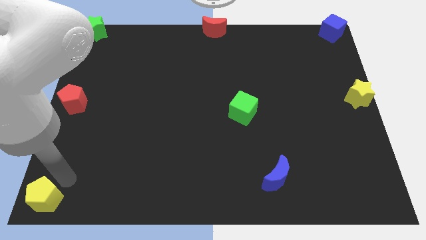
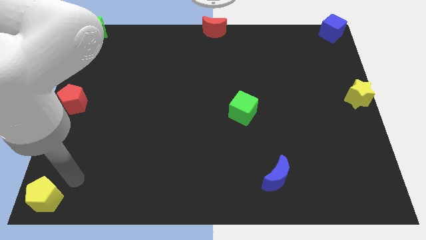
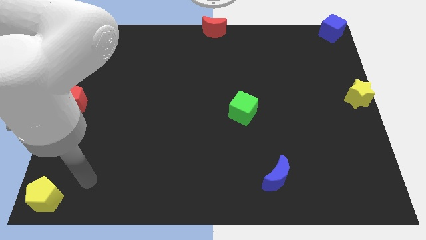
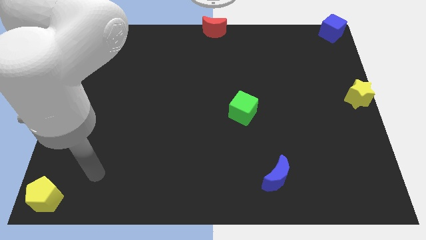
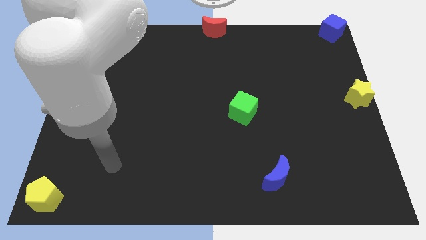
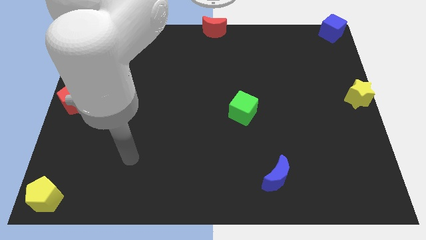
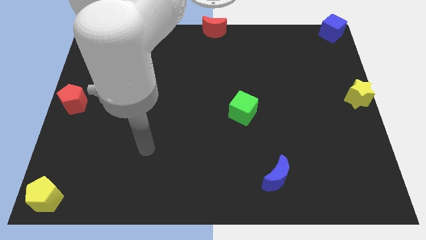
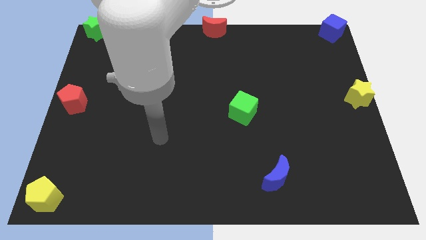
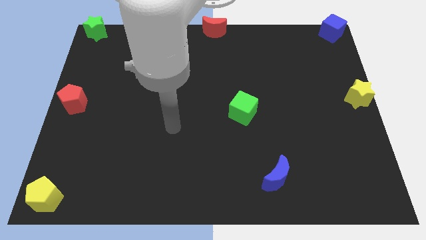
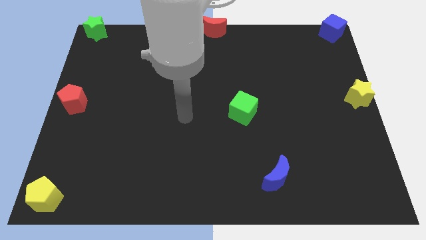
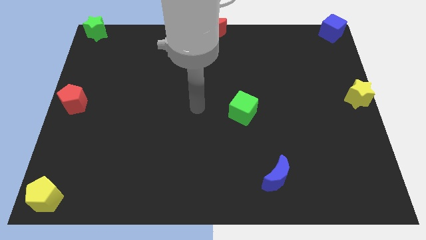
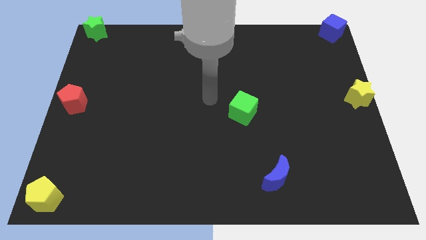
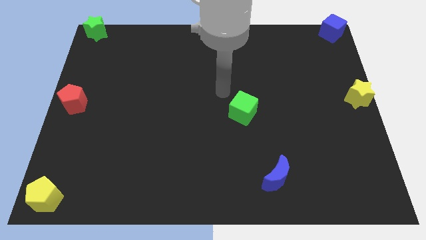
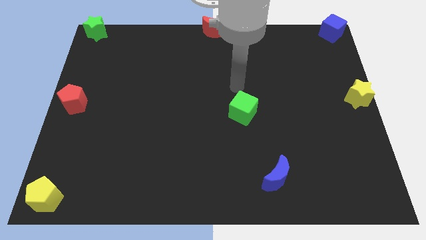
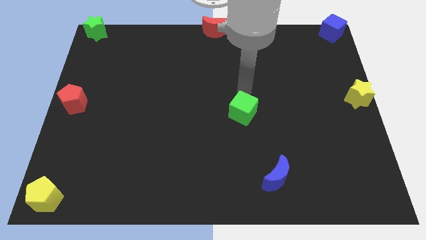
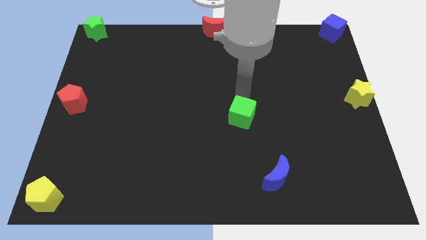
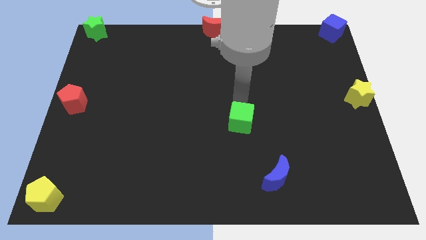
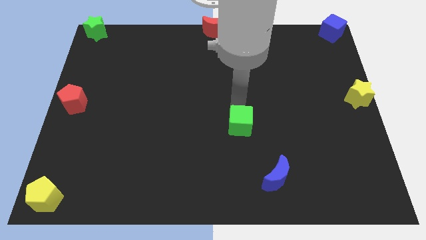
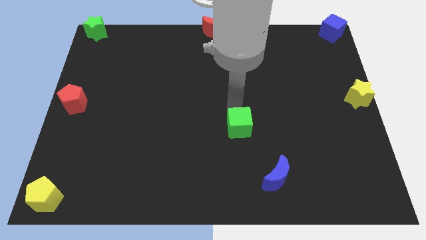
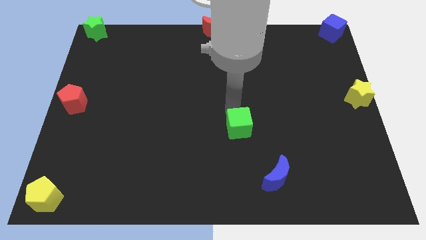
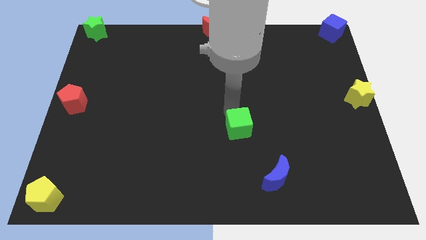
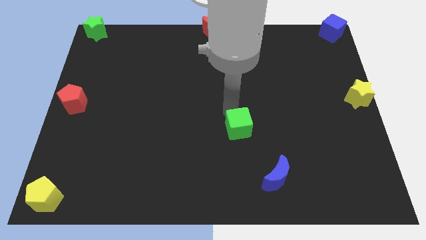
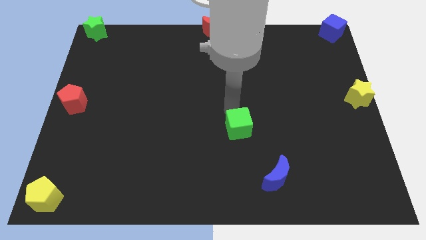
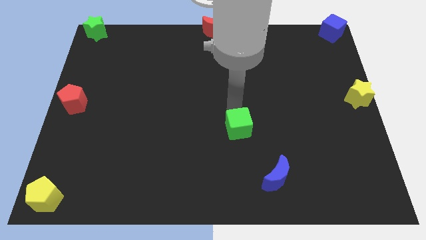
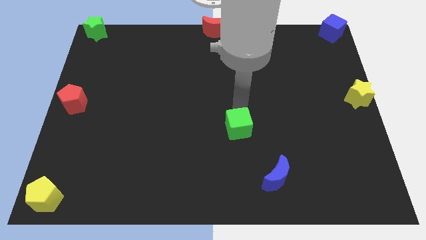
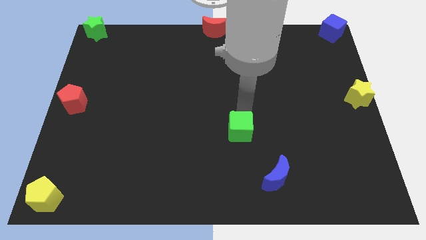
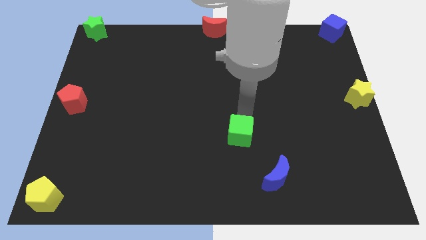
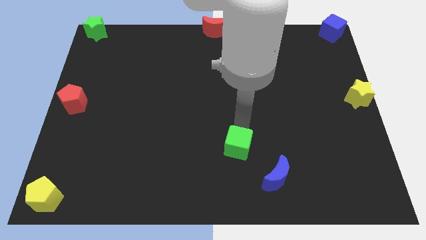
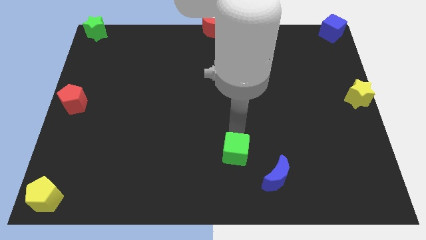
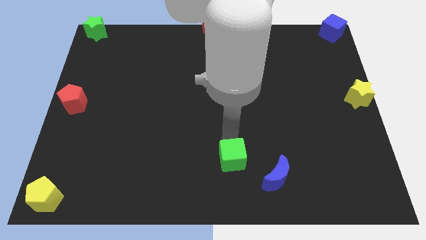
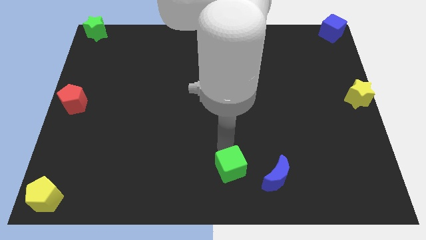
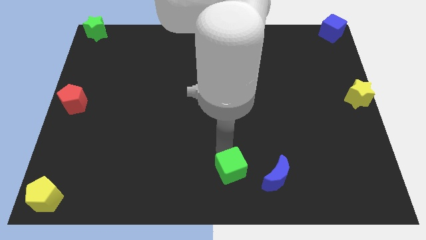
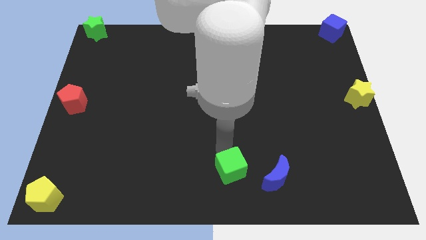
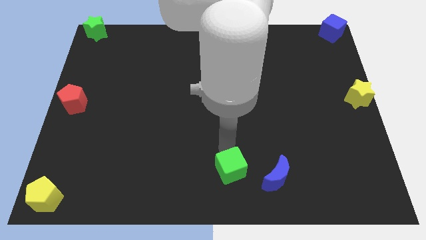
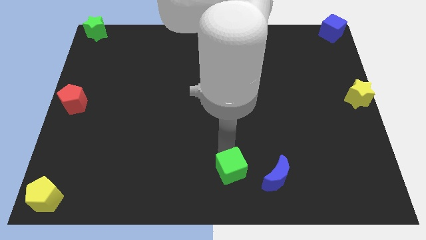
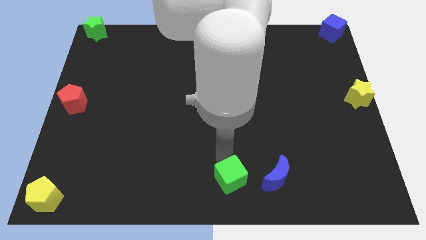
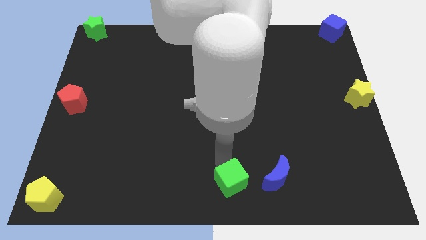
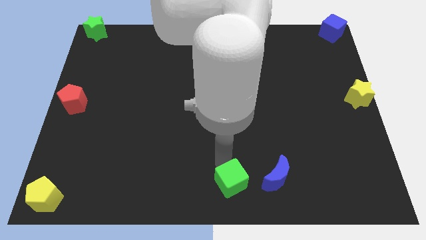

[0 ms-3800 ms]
move the green star to the left side of blue crescent

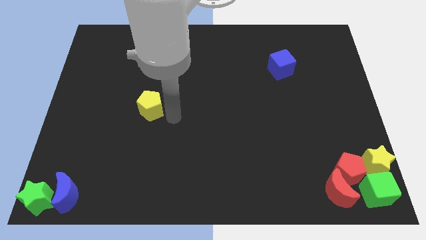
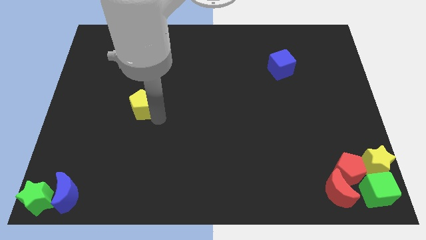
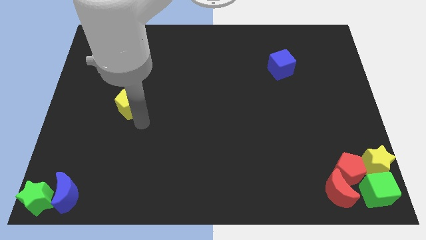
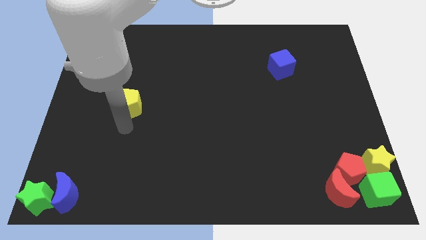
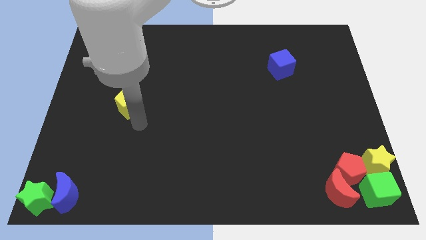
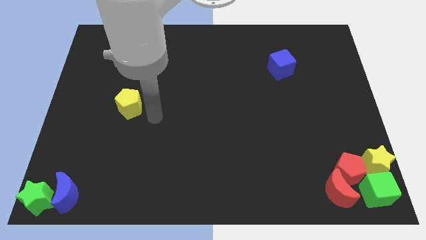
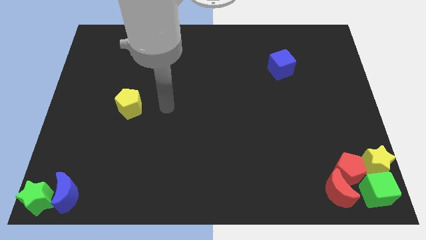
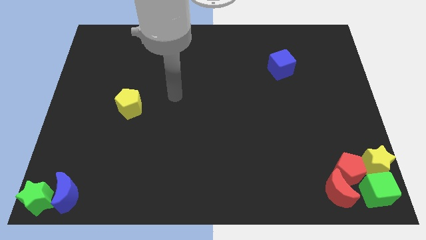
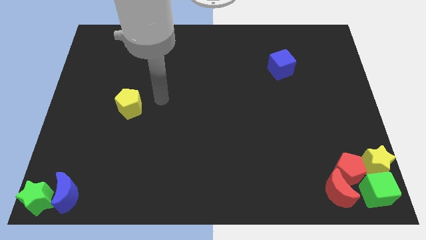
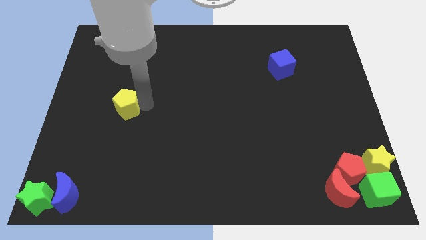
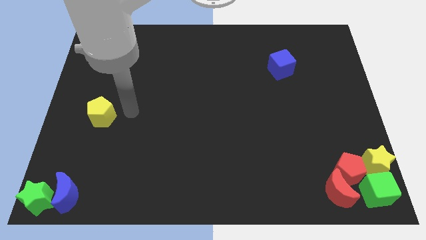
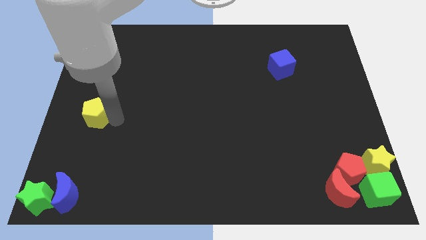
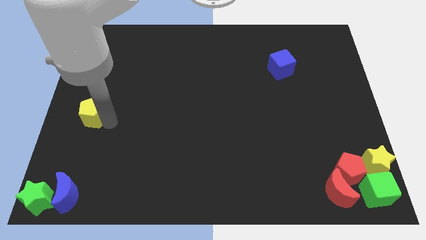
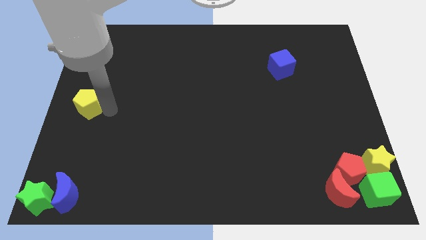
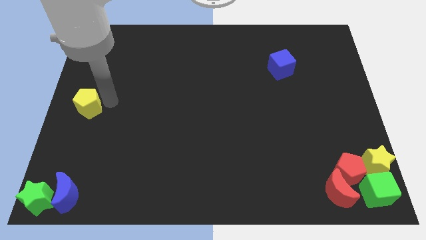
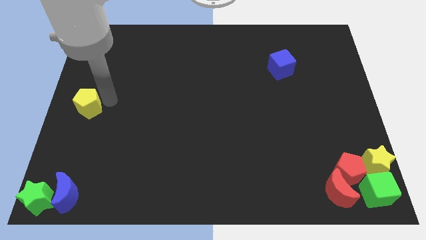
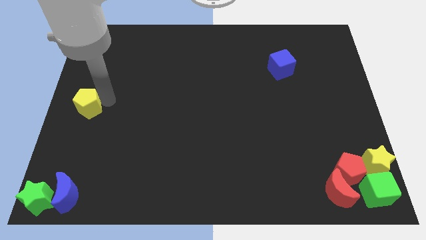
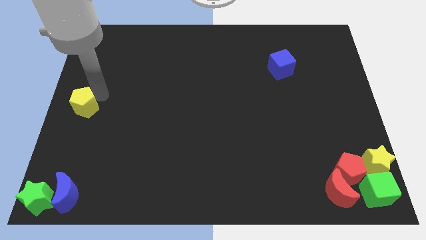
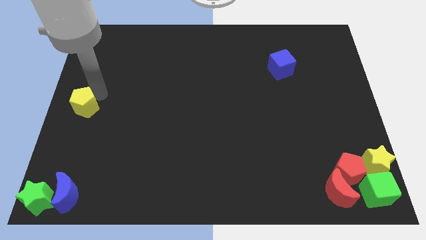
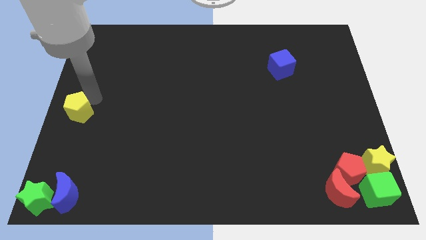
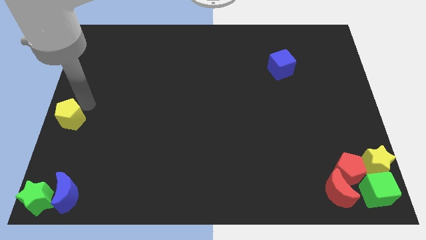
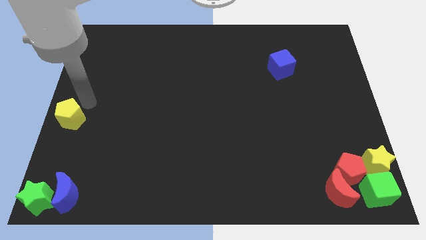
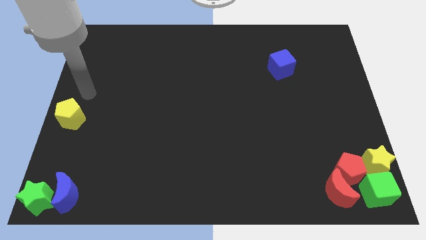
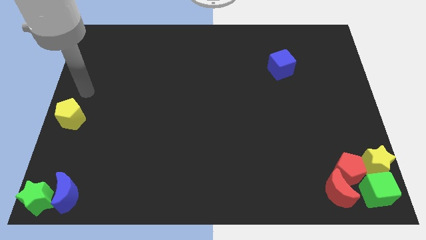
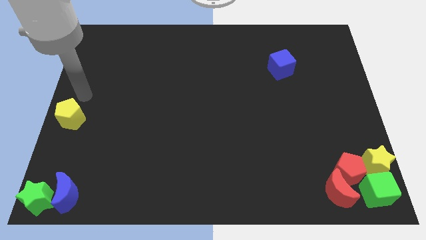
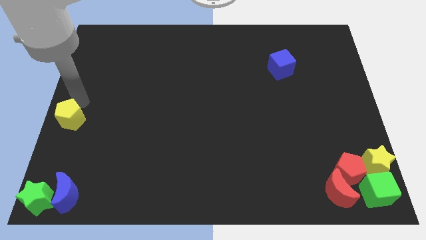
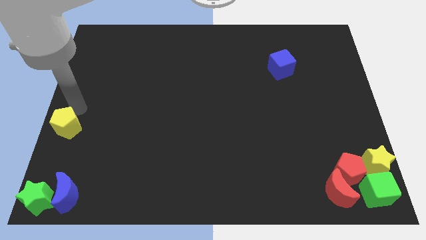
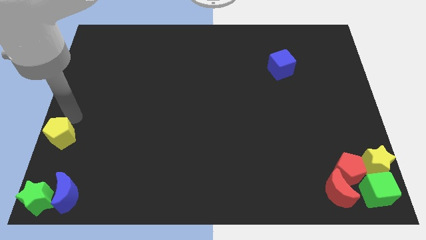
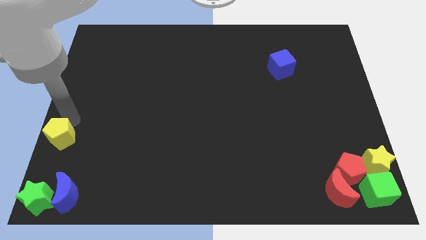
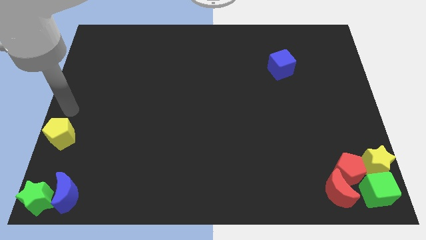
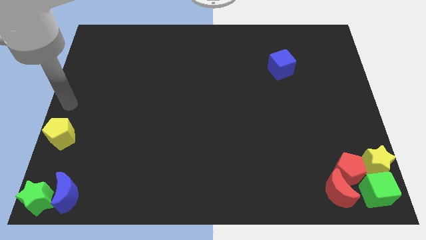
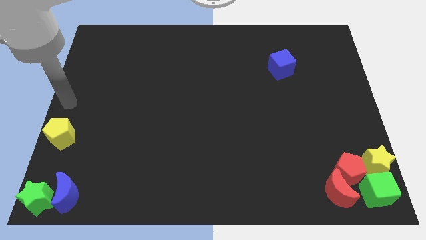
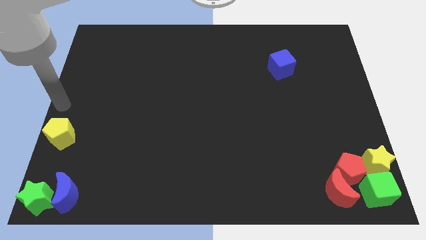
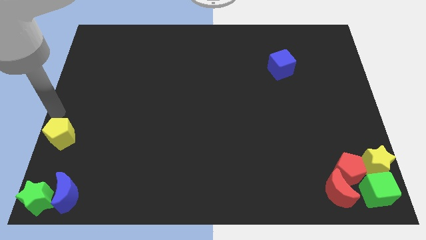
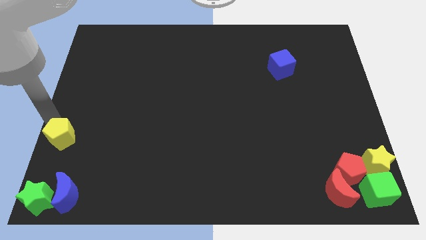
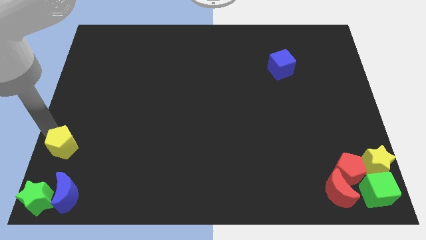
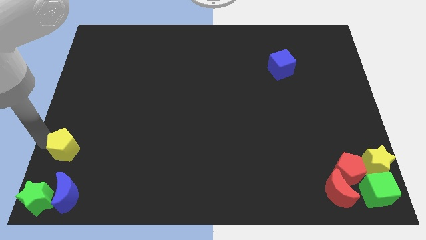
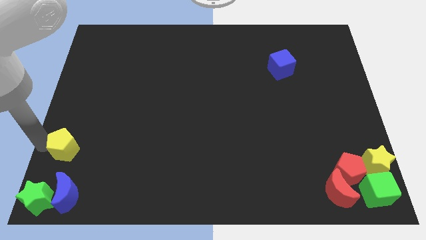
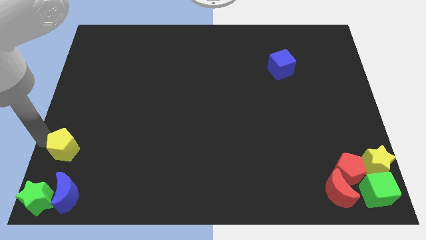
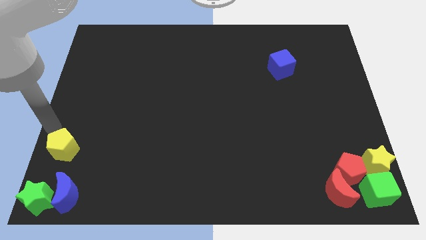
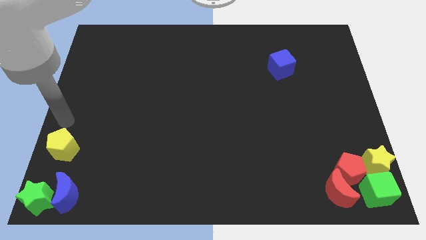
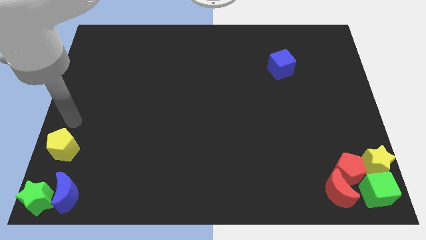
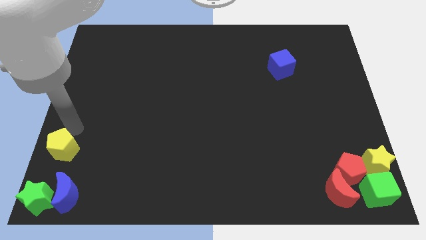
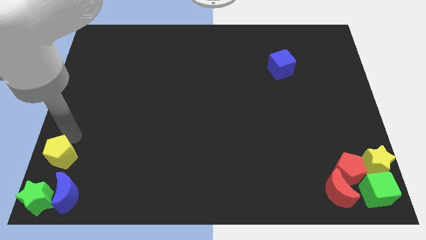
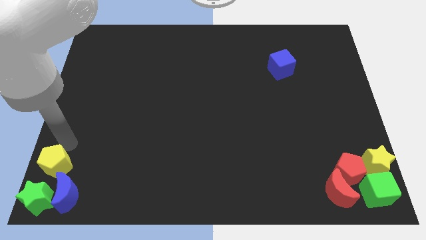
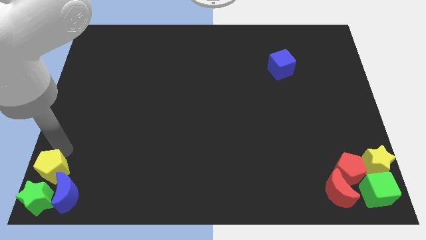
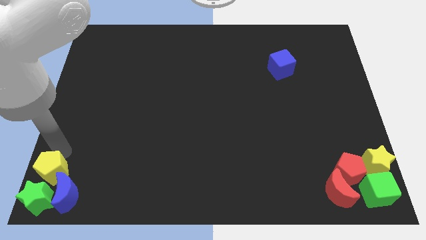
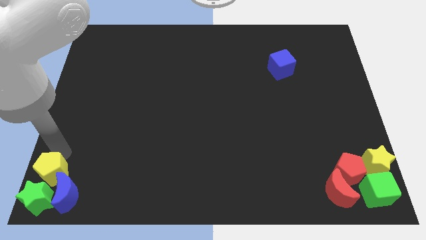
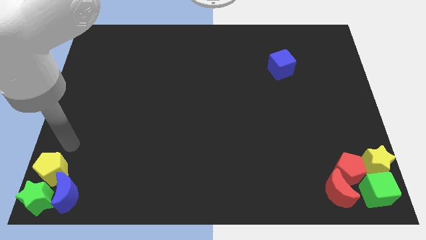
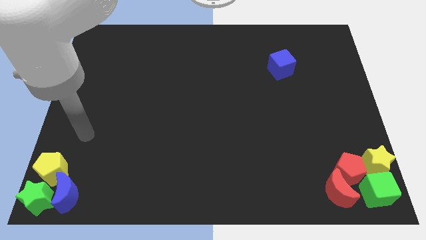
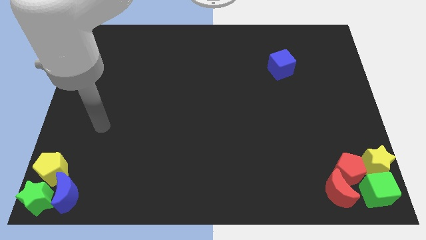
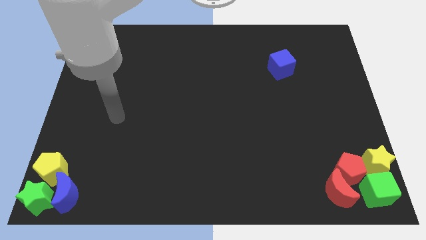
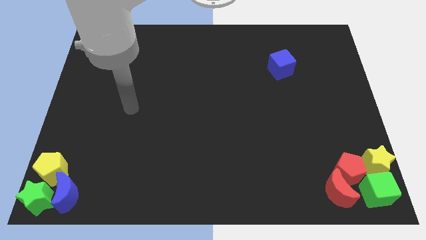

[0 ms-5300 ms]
place the yellow pentagon to the top of green star
